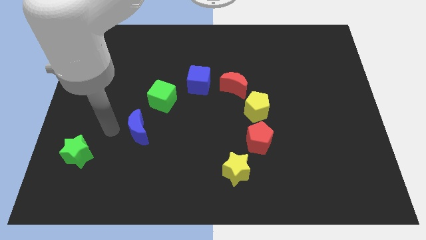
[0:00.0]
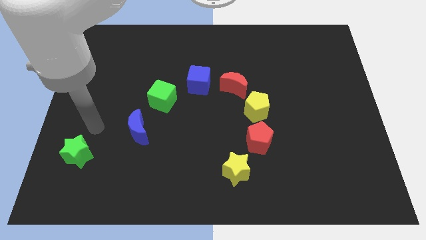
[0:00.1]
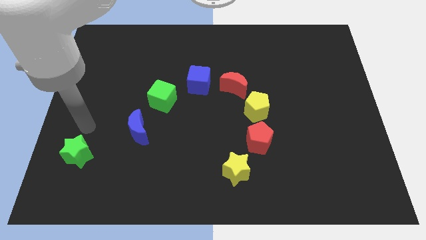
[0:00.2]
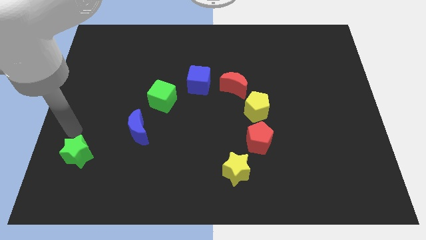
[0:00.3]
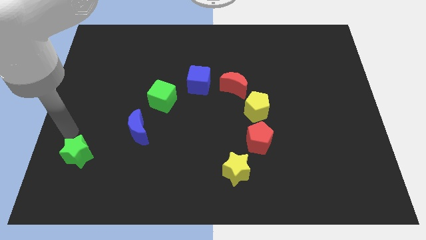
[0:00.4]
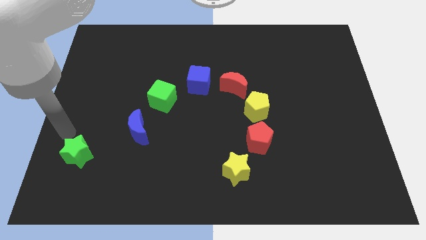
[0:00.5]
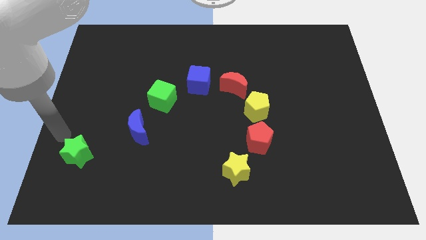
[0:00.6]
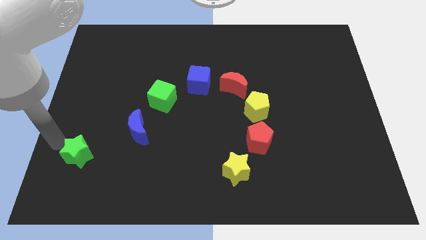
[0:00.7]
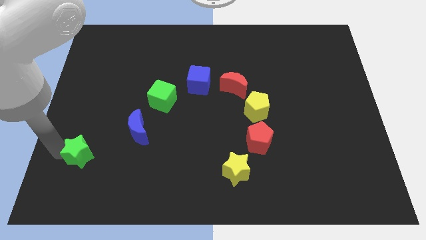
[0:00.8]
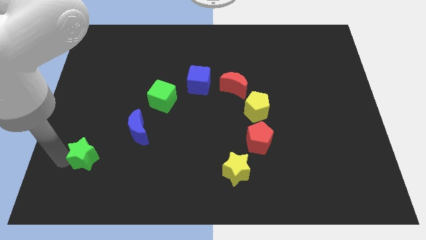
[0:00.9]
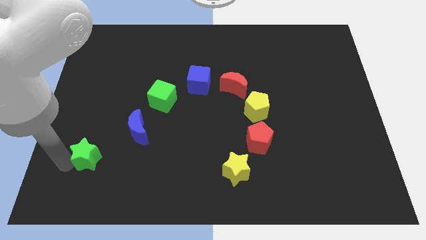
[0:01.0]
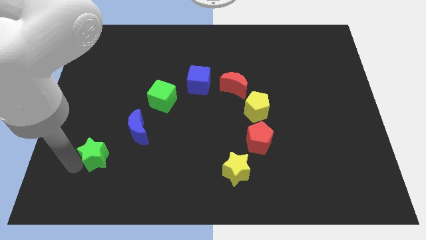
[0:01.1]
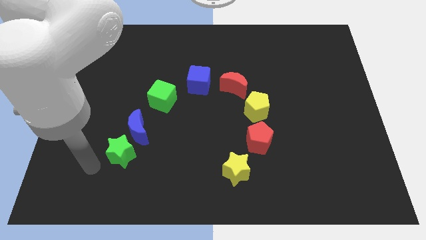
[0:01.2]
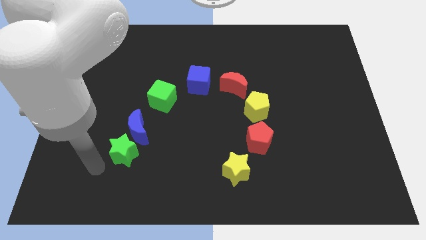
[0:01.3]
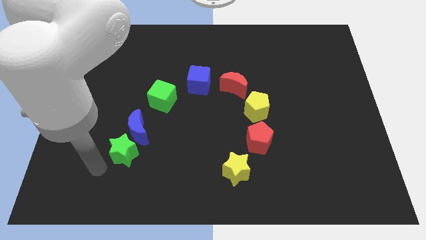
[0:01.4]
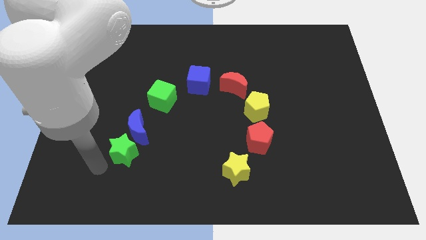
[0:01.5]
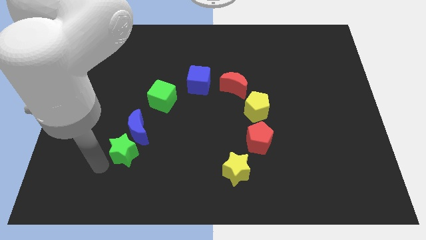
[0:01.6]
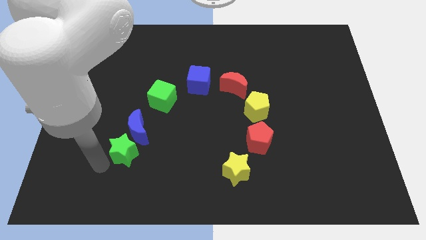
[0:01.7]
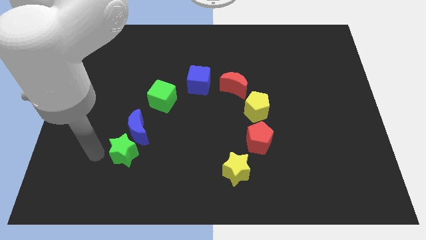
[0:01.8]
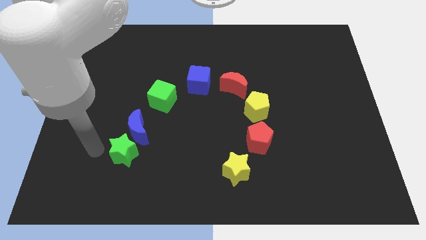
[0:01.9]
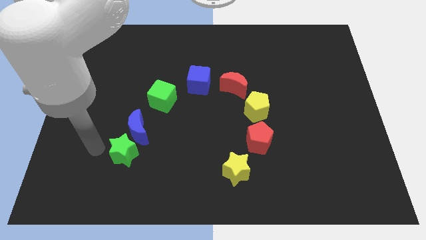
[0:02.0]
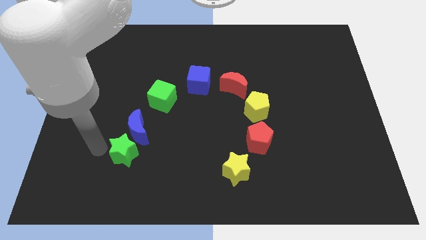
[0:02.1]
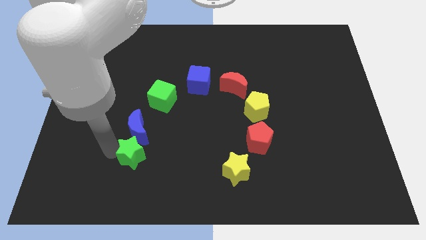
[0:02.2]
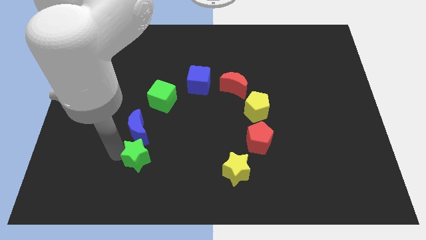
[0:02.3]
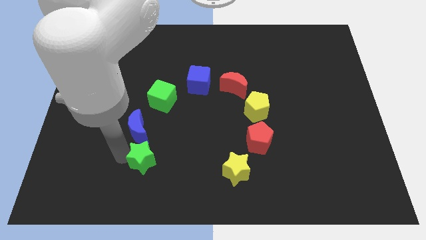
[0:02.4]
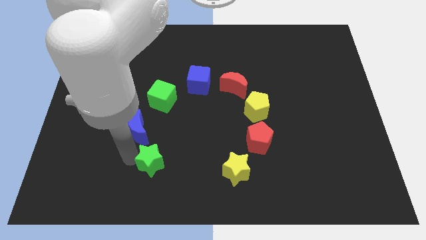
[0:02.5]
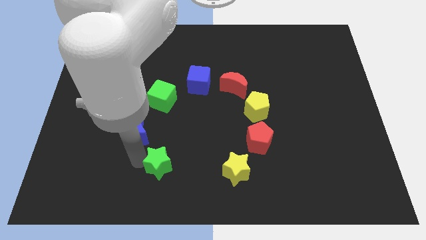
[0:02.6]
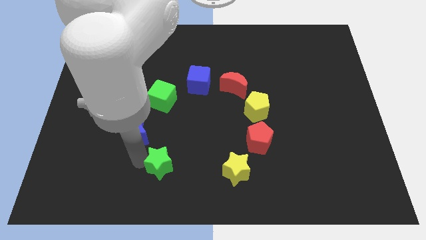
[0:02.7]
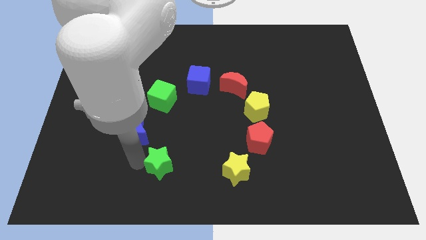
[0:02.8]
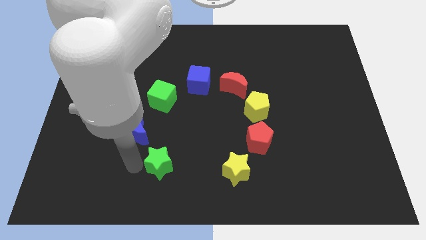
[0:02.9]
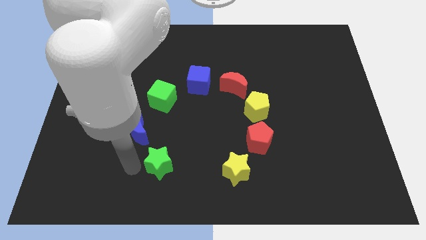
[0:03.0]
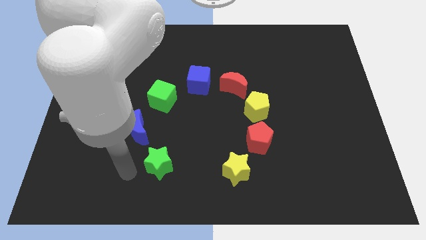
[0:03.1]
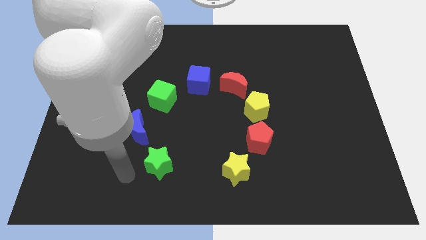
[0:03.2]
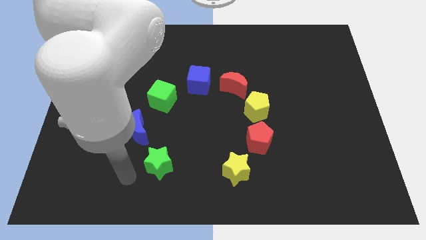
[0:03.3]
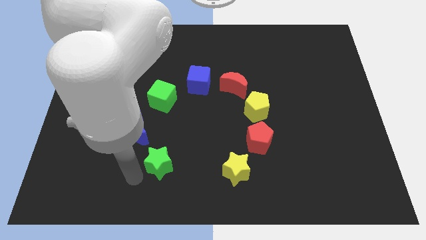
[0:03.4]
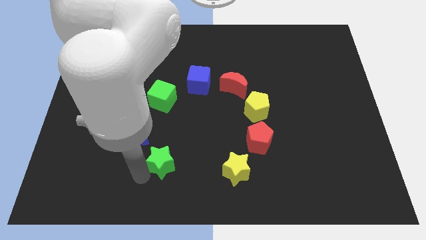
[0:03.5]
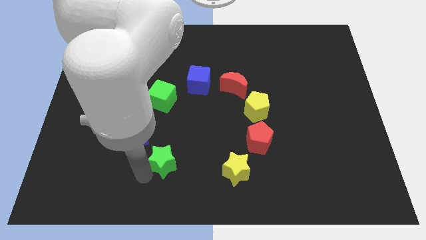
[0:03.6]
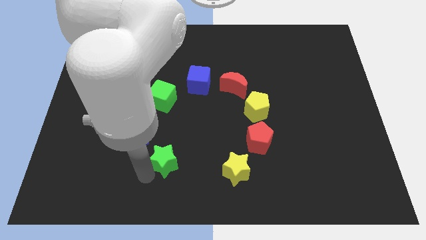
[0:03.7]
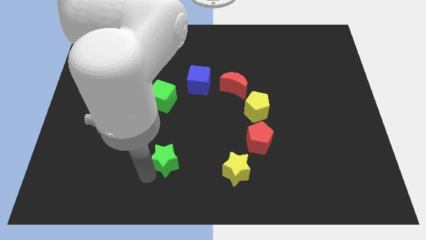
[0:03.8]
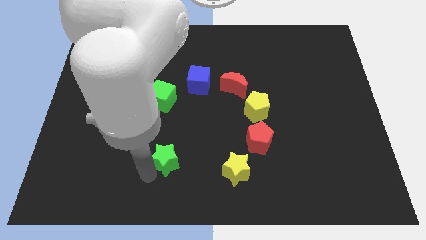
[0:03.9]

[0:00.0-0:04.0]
move the green star to the bottom right of the blue crescent

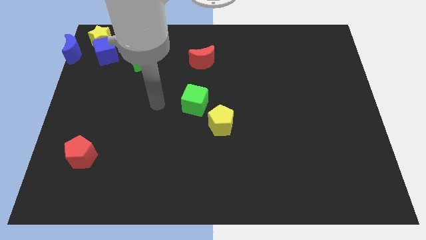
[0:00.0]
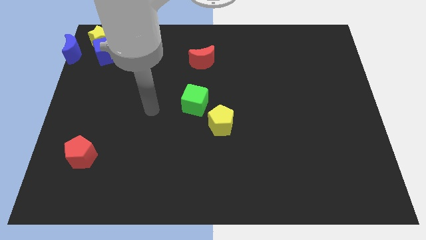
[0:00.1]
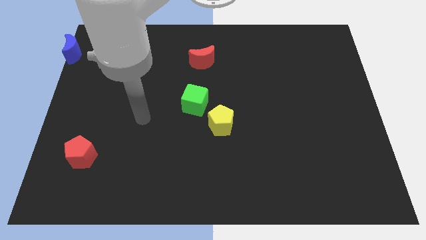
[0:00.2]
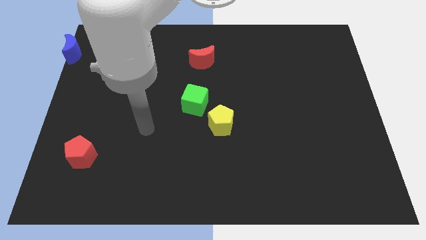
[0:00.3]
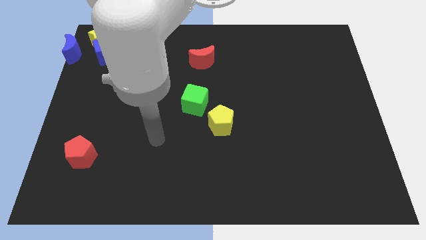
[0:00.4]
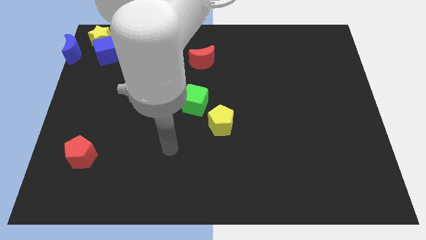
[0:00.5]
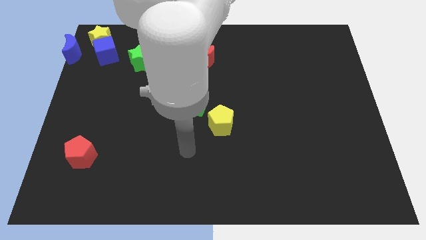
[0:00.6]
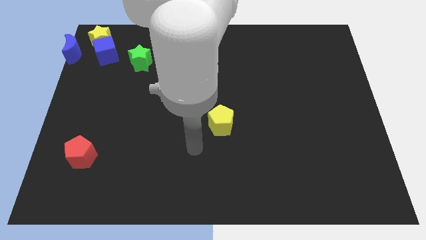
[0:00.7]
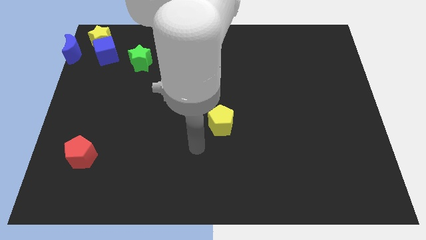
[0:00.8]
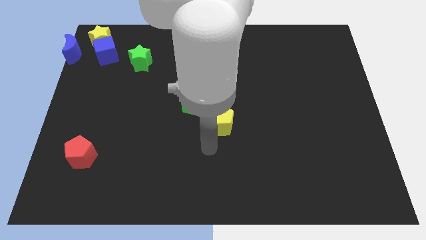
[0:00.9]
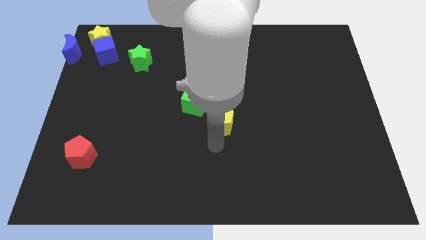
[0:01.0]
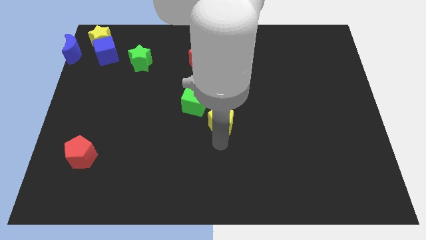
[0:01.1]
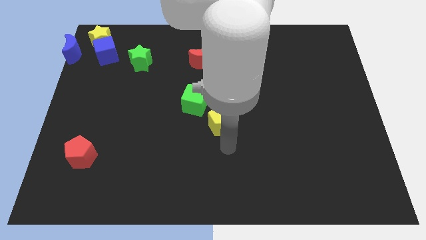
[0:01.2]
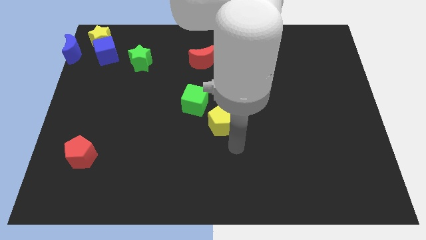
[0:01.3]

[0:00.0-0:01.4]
put your hand below the yellow pentagon

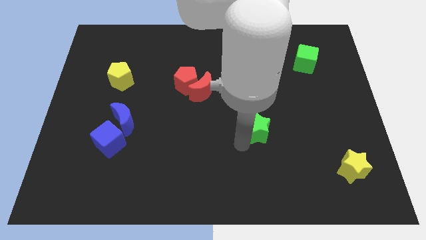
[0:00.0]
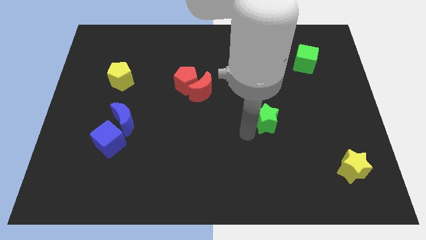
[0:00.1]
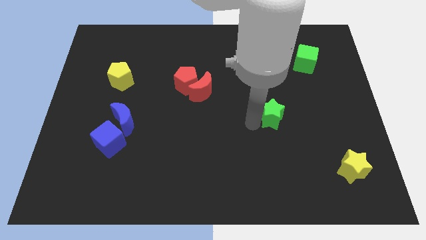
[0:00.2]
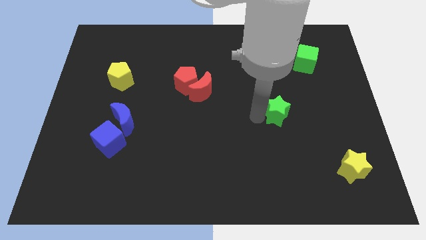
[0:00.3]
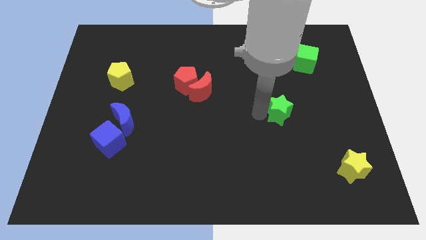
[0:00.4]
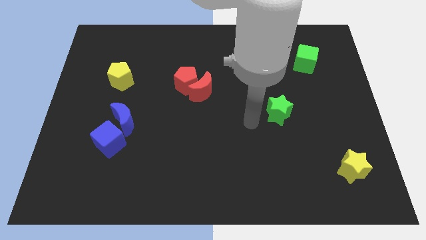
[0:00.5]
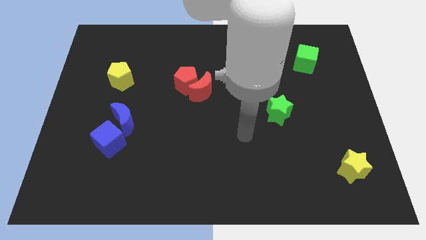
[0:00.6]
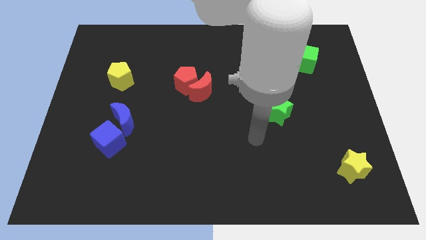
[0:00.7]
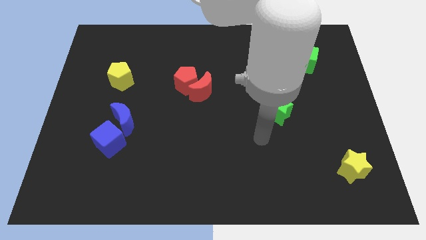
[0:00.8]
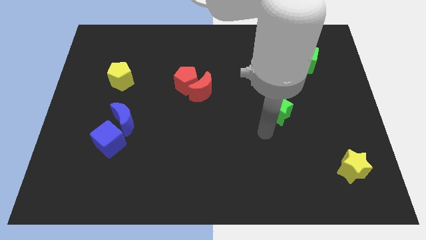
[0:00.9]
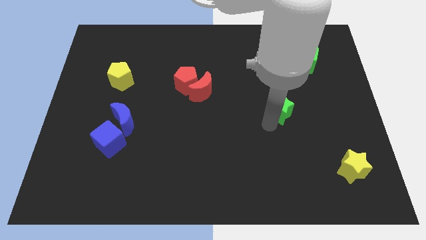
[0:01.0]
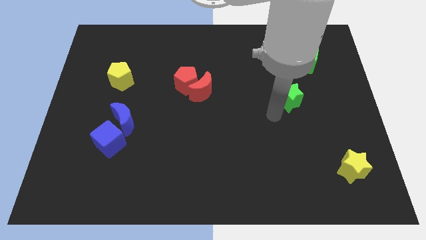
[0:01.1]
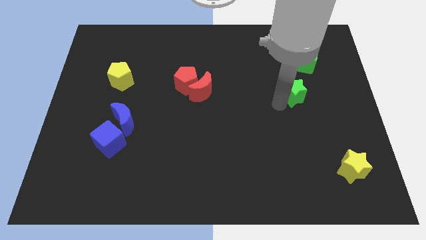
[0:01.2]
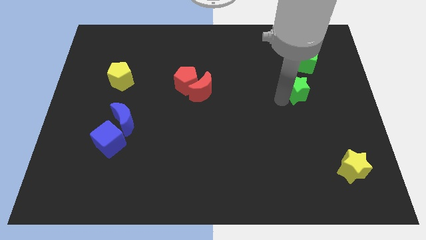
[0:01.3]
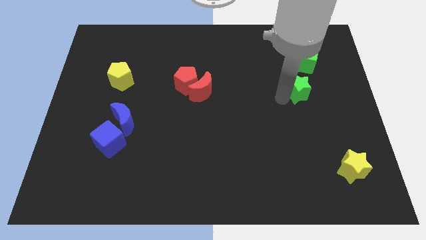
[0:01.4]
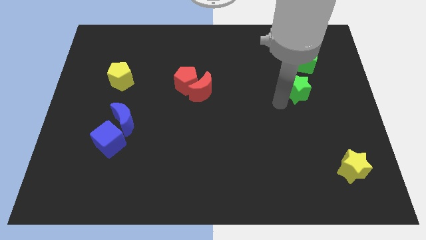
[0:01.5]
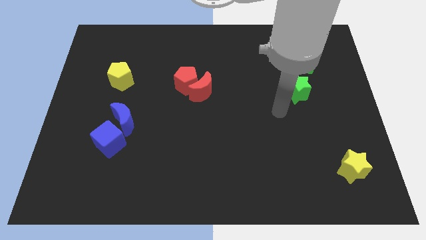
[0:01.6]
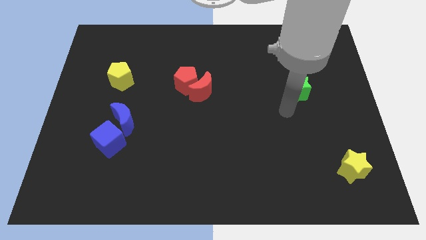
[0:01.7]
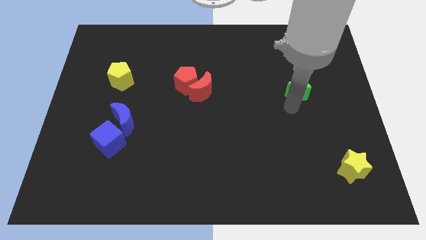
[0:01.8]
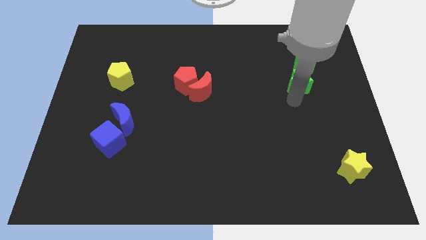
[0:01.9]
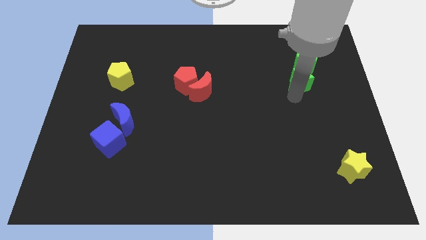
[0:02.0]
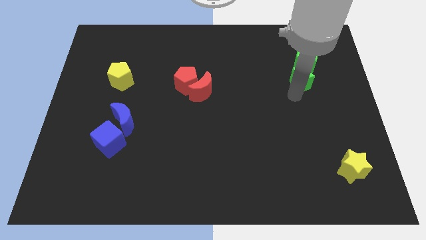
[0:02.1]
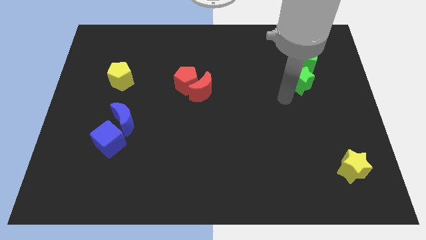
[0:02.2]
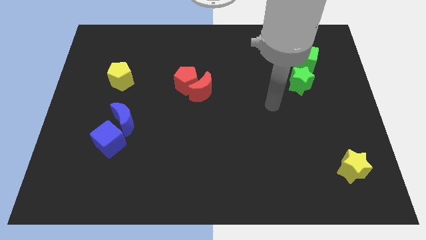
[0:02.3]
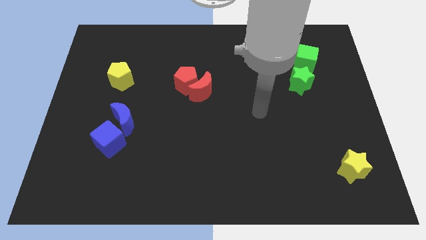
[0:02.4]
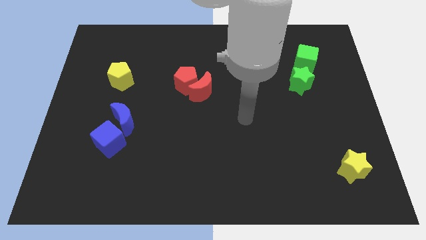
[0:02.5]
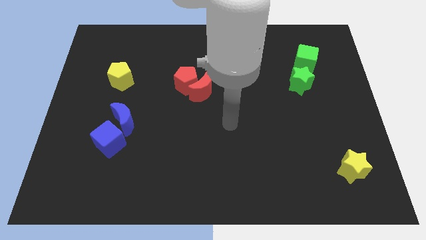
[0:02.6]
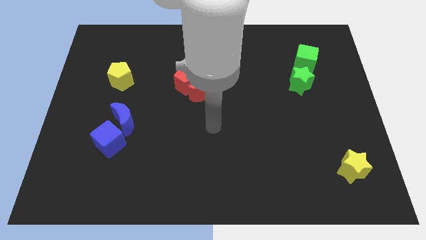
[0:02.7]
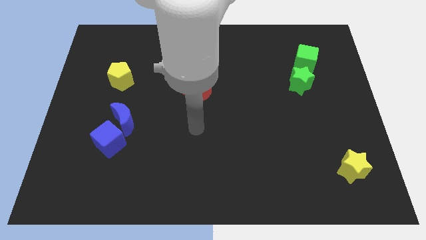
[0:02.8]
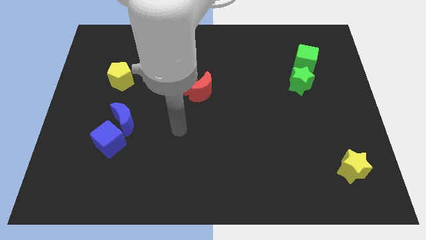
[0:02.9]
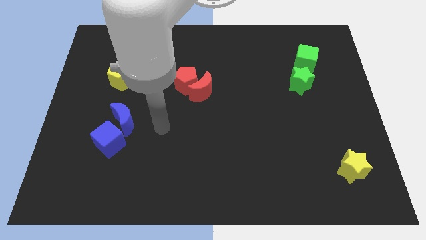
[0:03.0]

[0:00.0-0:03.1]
add green star into green cube

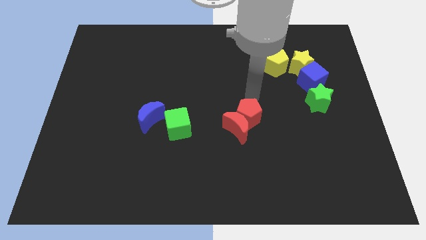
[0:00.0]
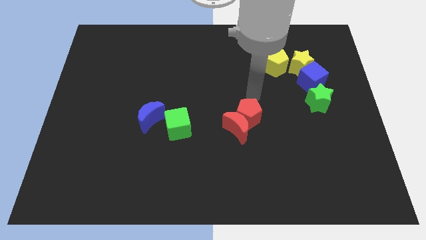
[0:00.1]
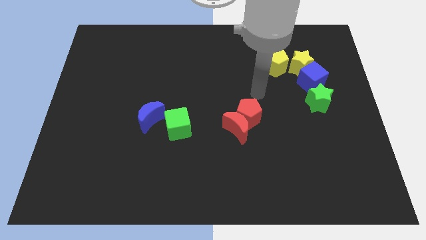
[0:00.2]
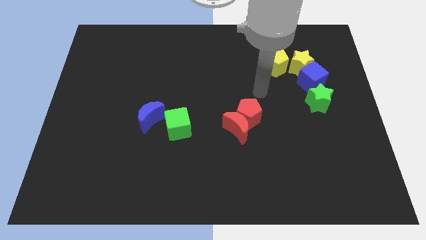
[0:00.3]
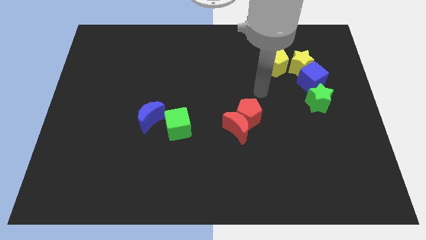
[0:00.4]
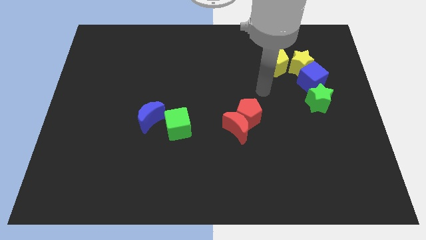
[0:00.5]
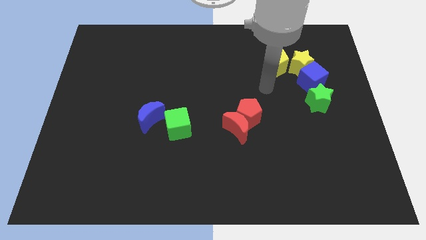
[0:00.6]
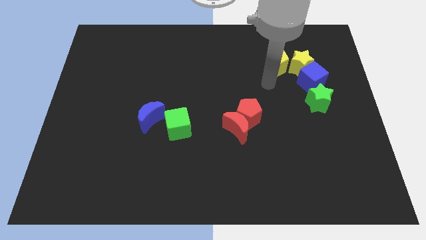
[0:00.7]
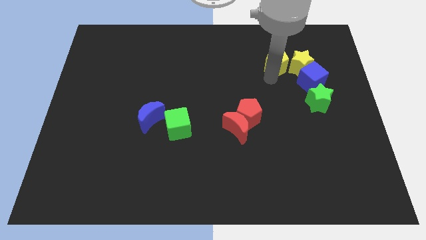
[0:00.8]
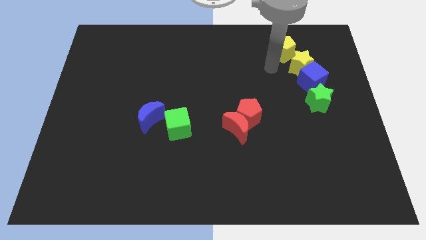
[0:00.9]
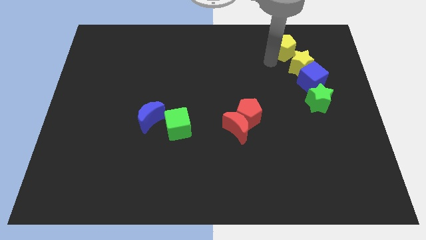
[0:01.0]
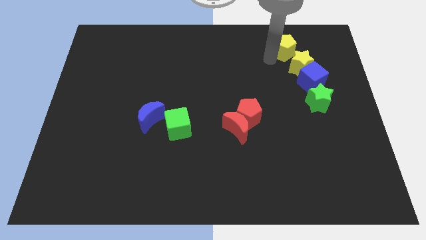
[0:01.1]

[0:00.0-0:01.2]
push the yellow pentagon slightly to the top
